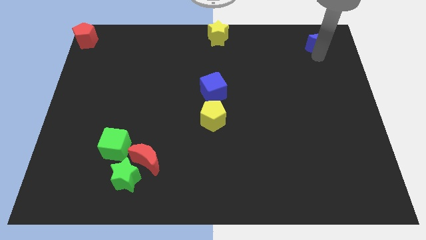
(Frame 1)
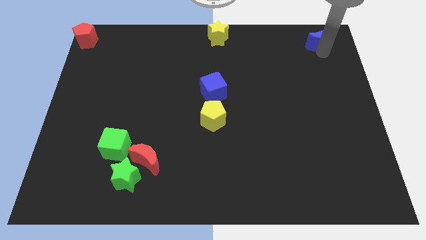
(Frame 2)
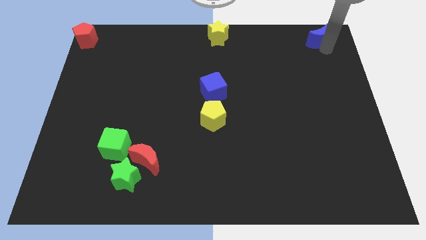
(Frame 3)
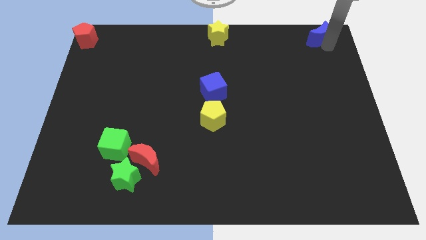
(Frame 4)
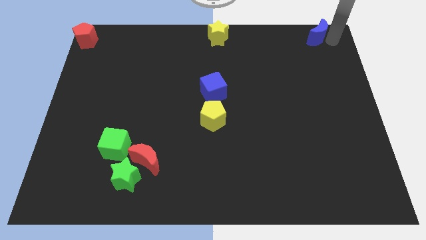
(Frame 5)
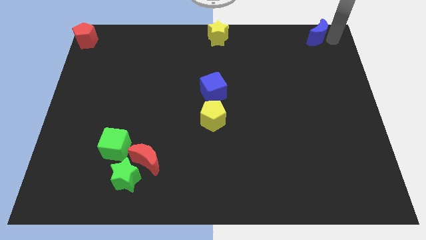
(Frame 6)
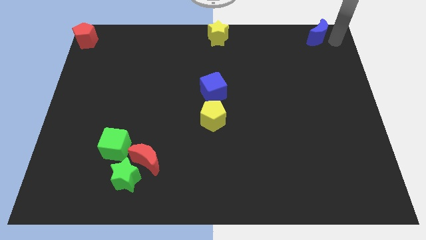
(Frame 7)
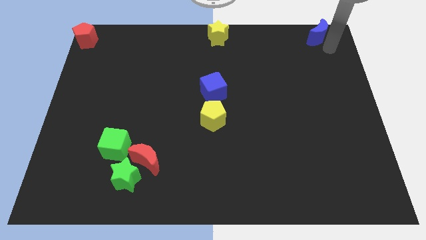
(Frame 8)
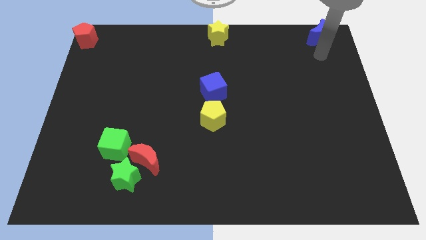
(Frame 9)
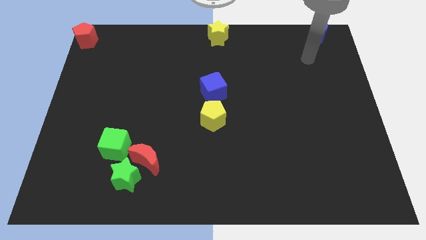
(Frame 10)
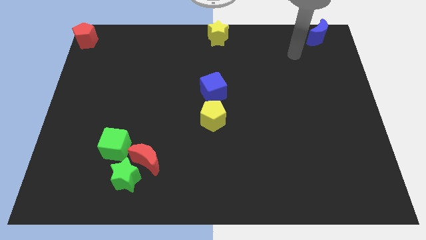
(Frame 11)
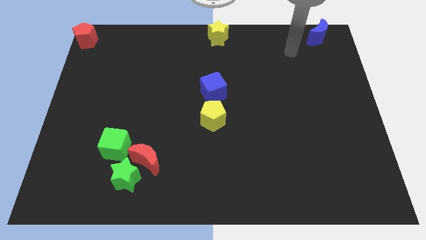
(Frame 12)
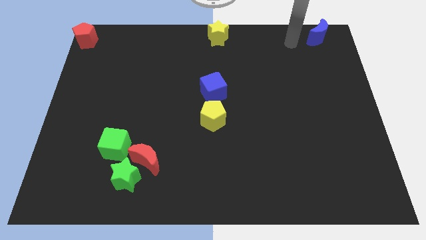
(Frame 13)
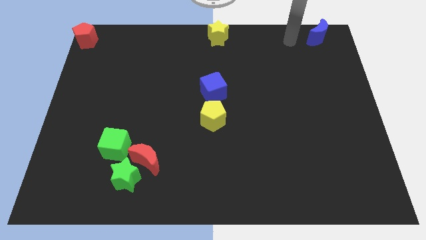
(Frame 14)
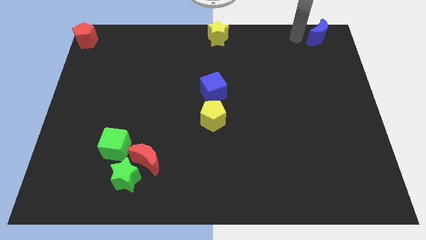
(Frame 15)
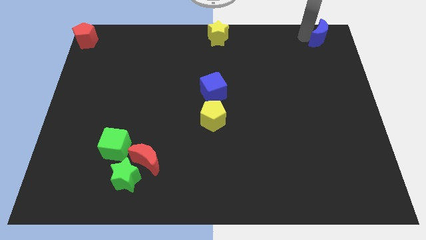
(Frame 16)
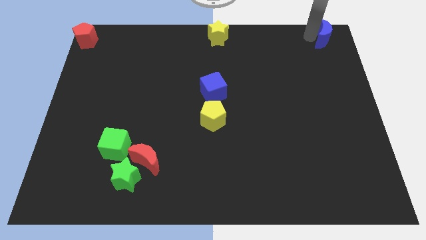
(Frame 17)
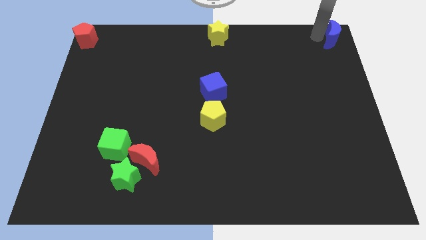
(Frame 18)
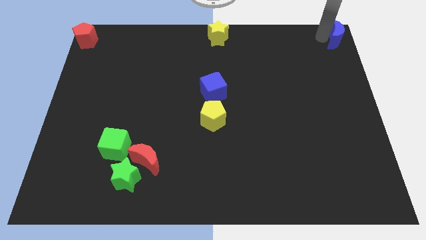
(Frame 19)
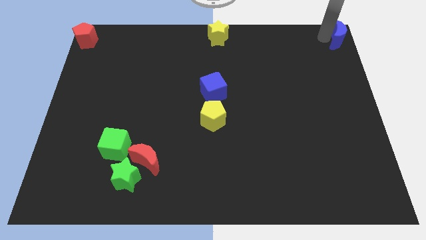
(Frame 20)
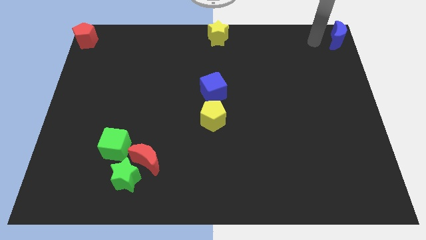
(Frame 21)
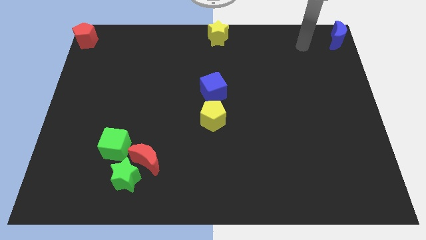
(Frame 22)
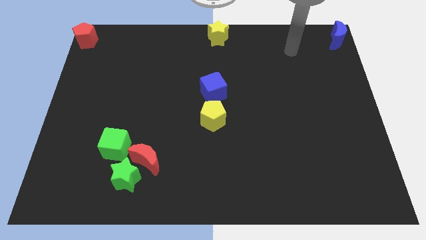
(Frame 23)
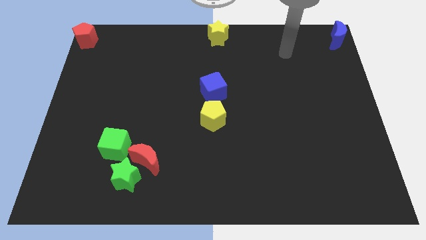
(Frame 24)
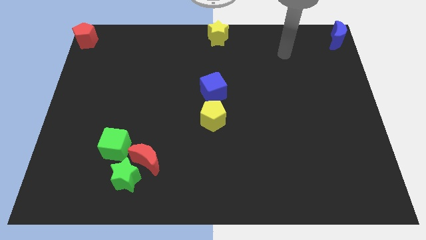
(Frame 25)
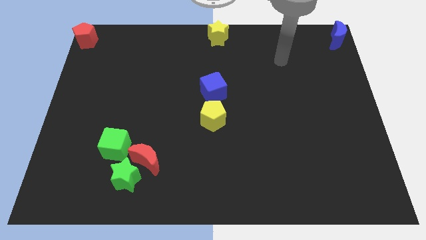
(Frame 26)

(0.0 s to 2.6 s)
move the blue crescent to the top right of the board

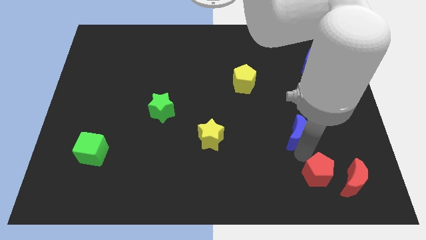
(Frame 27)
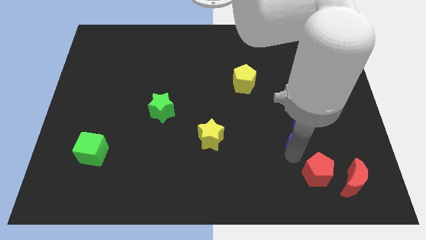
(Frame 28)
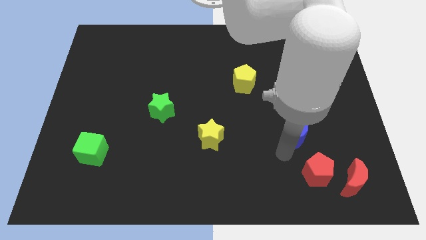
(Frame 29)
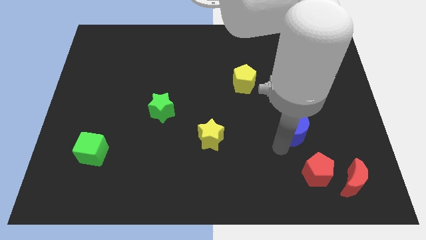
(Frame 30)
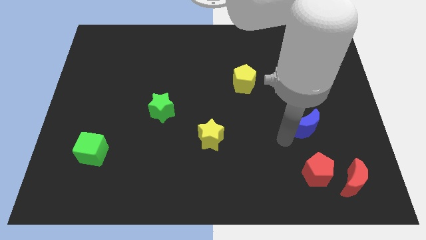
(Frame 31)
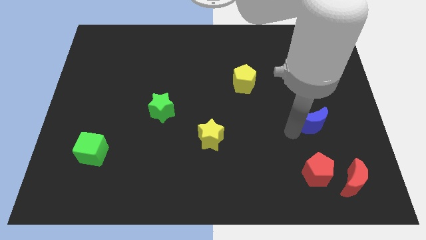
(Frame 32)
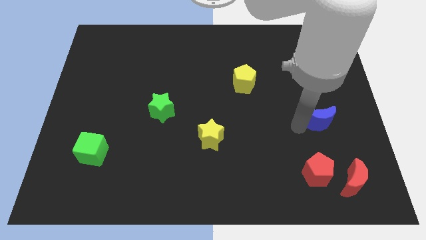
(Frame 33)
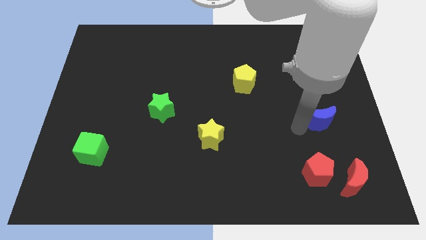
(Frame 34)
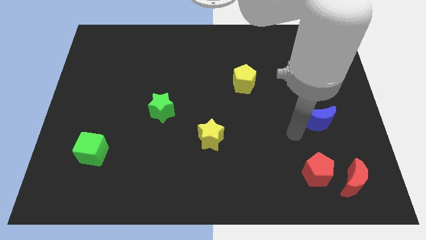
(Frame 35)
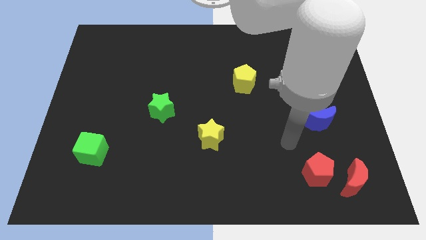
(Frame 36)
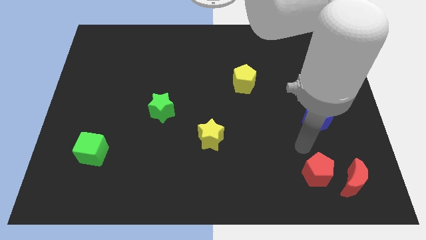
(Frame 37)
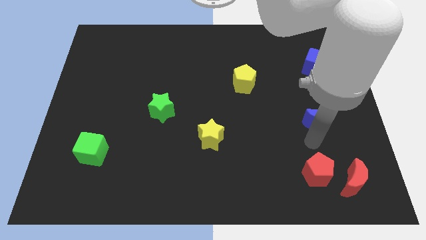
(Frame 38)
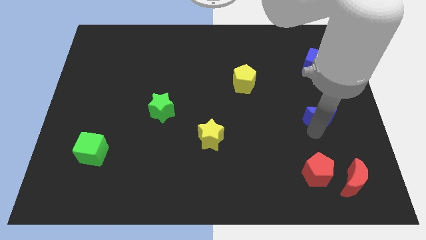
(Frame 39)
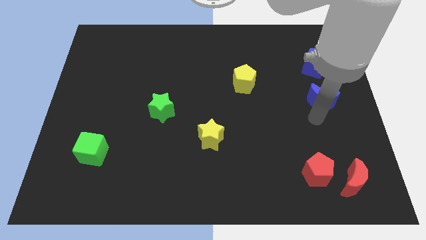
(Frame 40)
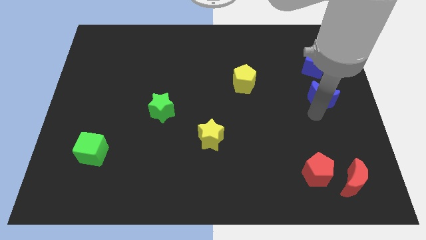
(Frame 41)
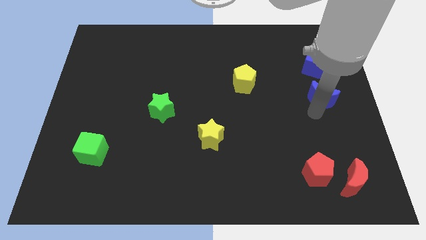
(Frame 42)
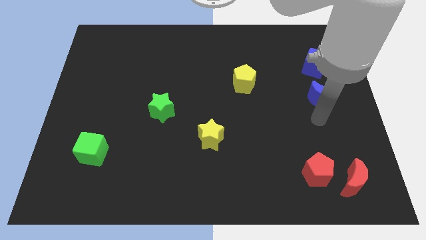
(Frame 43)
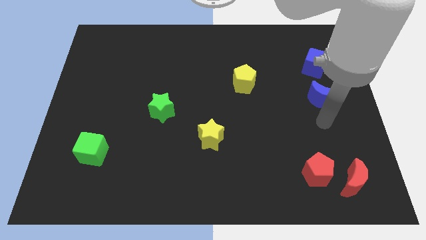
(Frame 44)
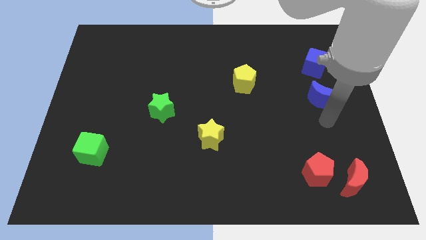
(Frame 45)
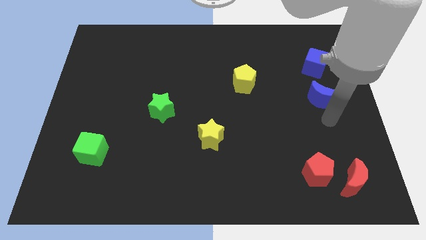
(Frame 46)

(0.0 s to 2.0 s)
move the blue semi circle towards the blue cube

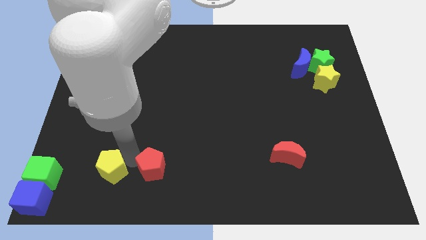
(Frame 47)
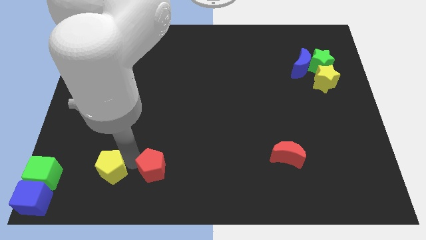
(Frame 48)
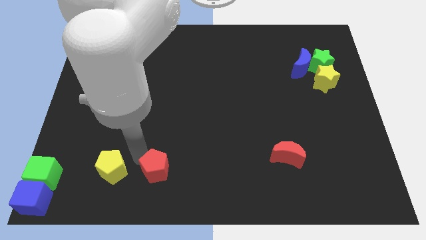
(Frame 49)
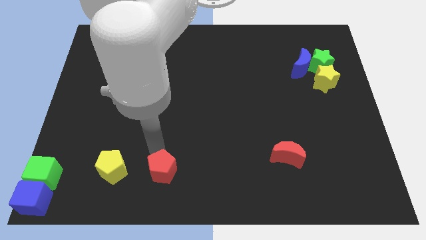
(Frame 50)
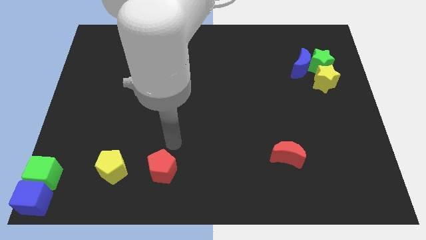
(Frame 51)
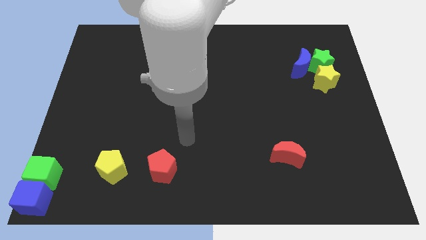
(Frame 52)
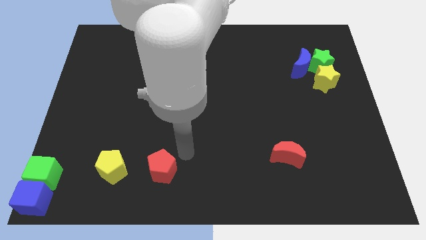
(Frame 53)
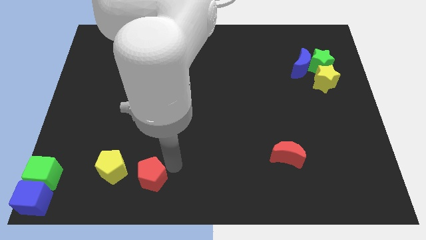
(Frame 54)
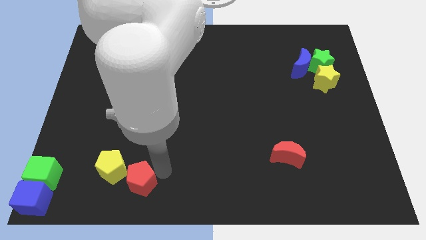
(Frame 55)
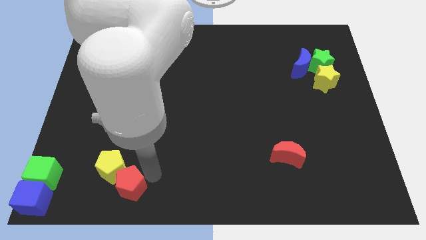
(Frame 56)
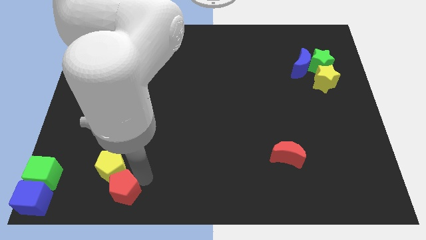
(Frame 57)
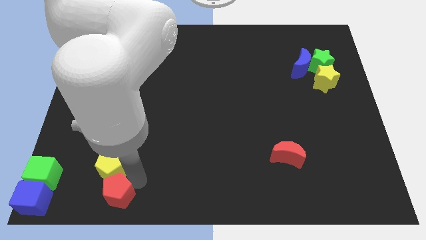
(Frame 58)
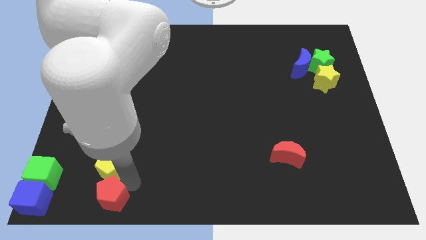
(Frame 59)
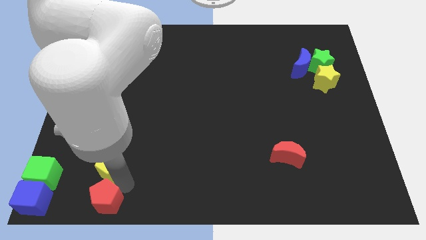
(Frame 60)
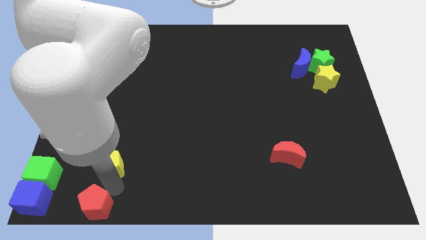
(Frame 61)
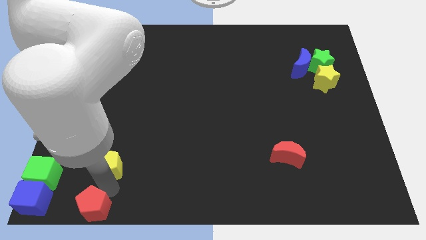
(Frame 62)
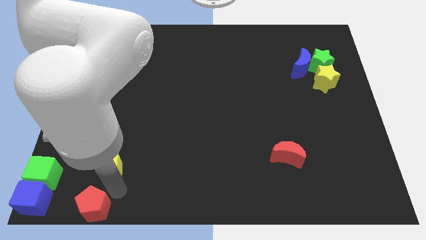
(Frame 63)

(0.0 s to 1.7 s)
place red pentagon to the bottom of the yellow pentagon

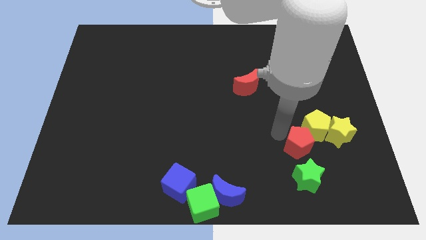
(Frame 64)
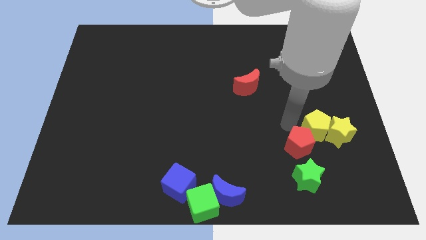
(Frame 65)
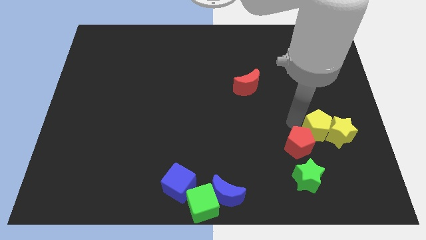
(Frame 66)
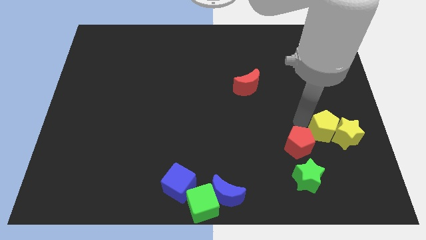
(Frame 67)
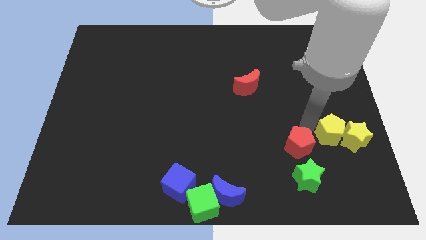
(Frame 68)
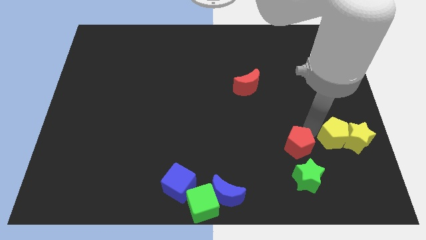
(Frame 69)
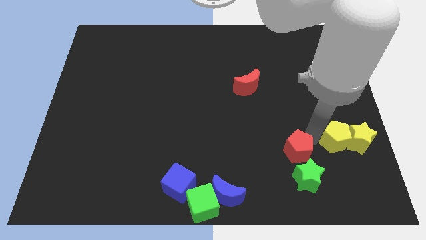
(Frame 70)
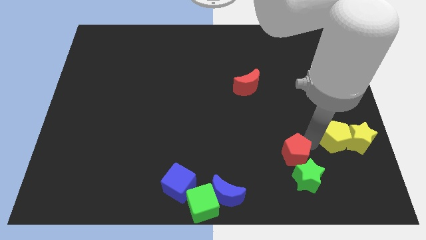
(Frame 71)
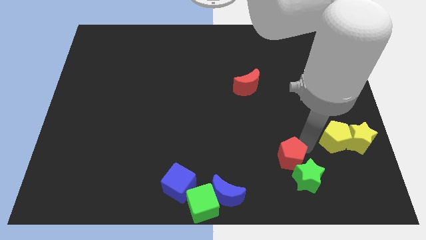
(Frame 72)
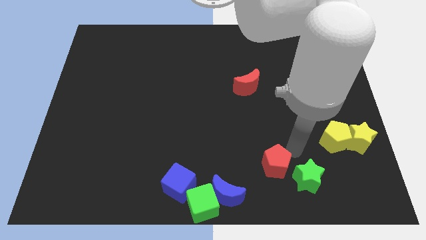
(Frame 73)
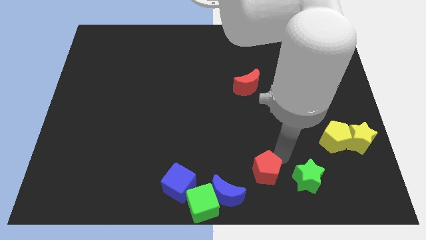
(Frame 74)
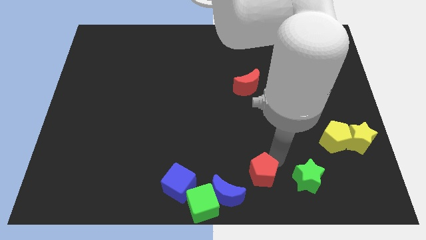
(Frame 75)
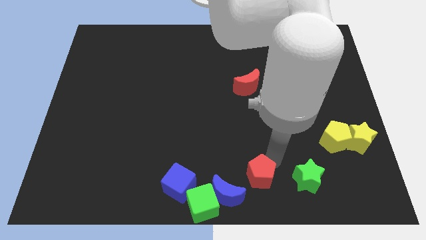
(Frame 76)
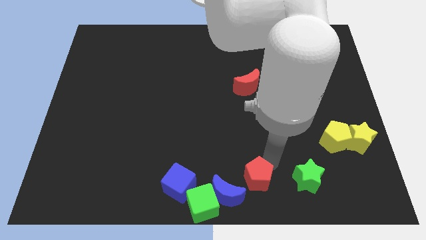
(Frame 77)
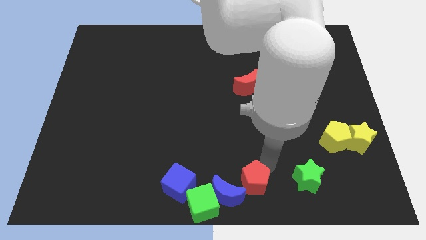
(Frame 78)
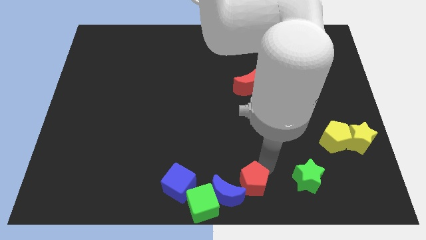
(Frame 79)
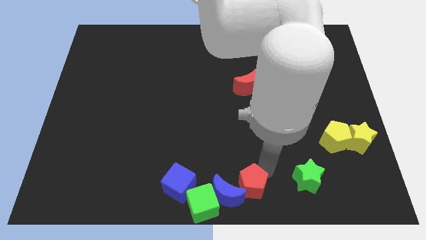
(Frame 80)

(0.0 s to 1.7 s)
push the red pentagon to the right side of the blue moon

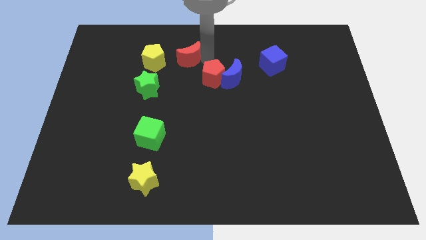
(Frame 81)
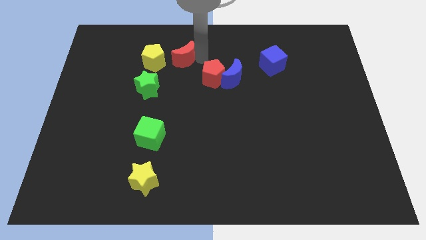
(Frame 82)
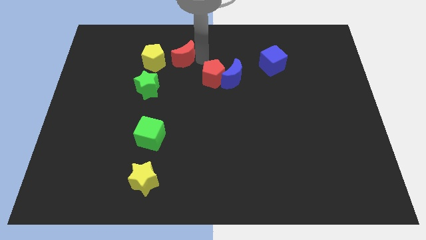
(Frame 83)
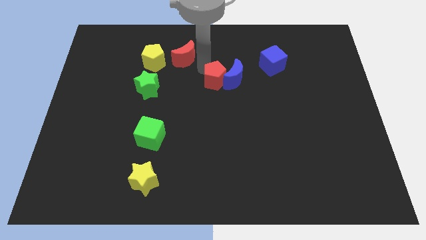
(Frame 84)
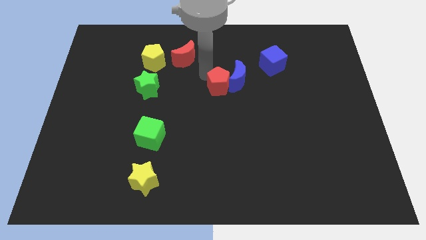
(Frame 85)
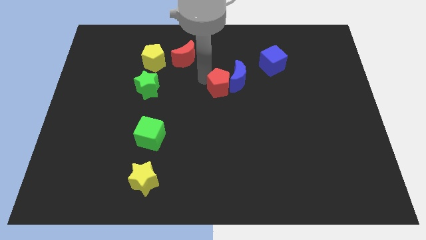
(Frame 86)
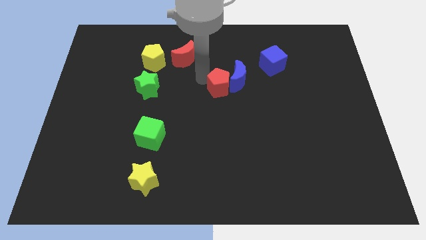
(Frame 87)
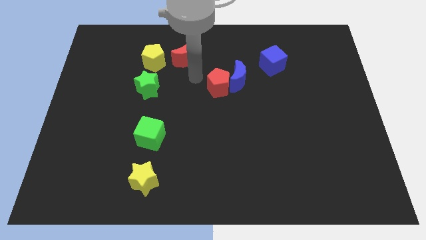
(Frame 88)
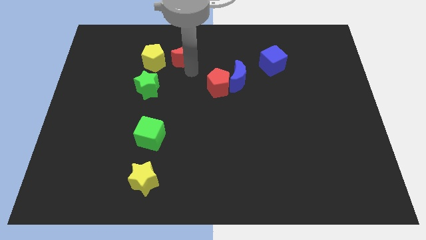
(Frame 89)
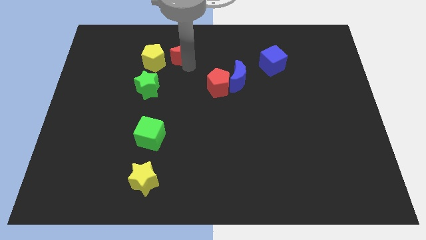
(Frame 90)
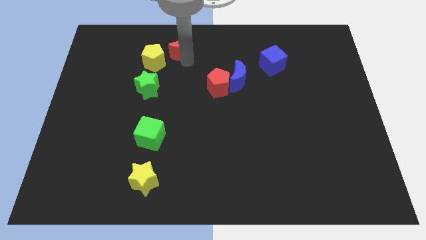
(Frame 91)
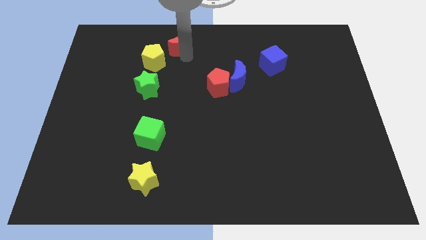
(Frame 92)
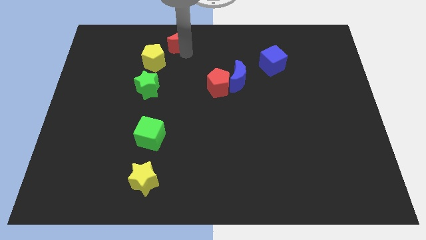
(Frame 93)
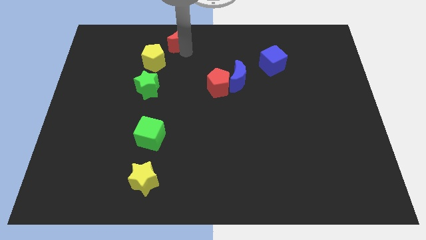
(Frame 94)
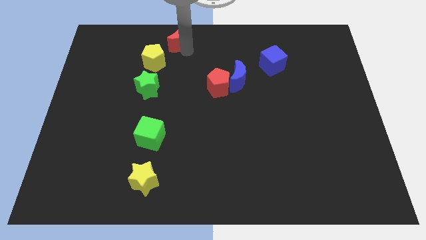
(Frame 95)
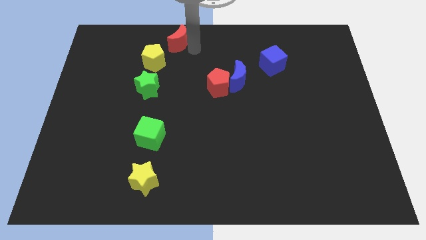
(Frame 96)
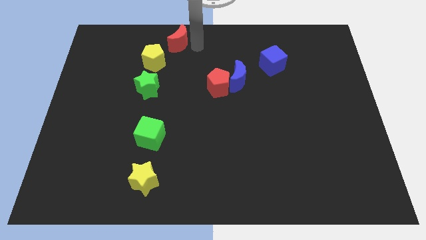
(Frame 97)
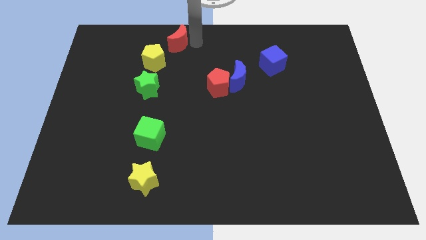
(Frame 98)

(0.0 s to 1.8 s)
move the red moon to the top of the board
